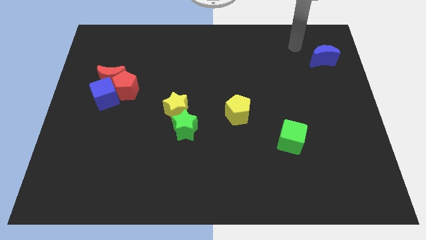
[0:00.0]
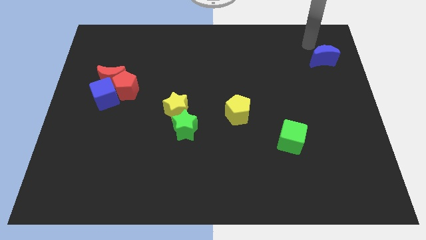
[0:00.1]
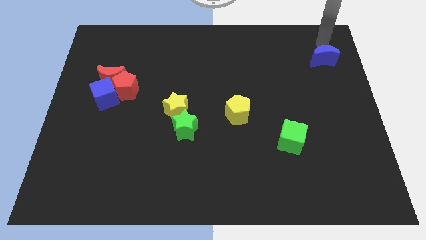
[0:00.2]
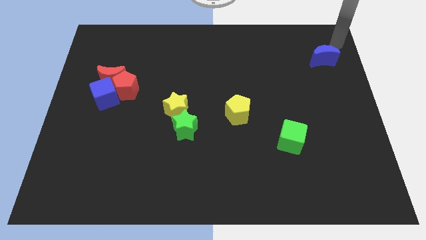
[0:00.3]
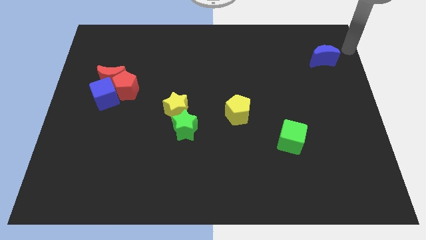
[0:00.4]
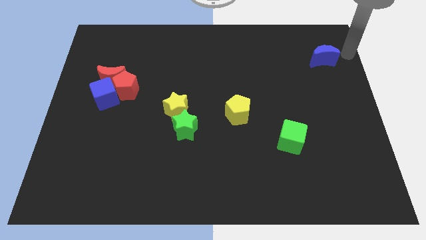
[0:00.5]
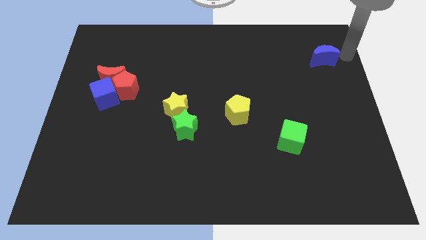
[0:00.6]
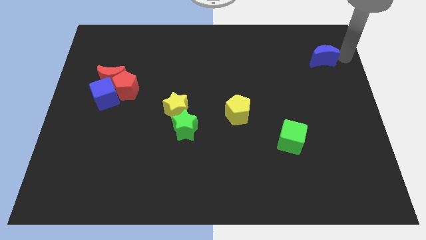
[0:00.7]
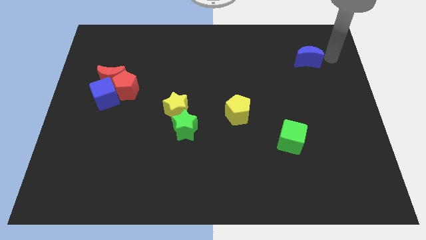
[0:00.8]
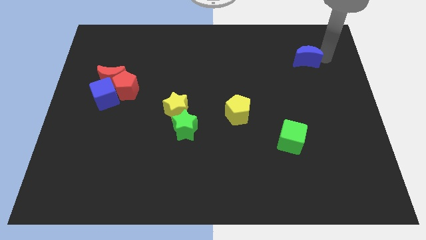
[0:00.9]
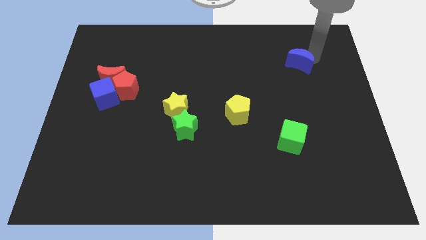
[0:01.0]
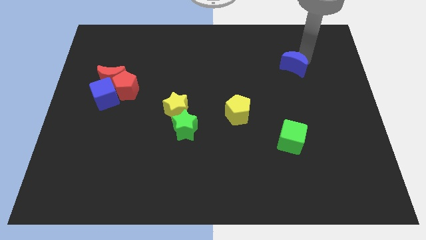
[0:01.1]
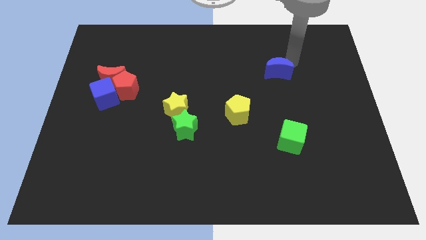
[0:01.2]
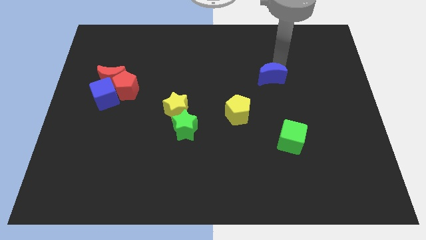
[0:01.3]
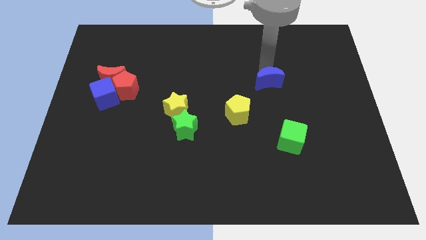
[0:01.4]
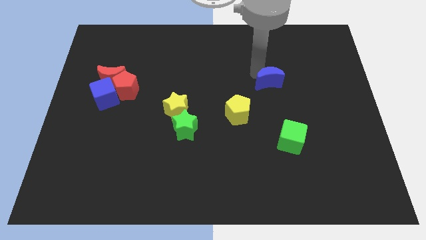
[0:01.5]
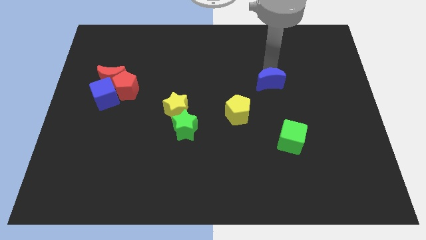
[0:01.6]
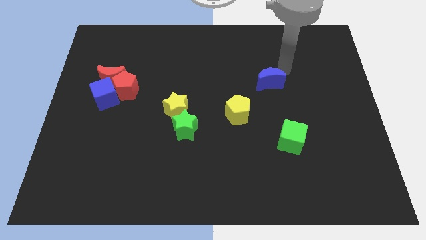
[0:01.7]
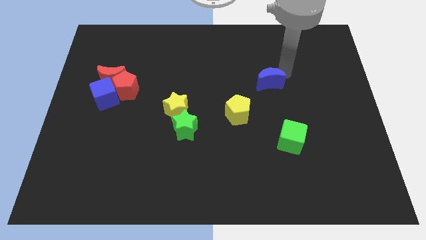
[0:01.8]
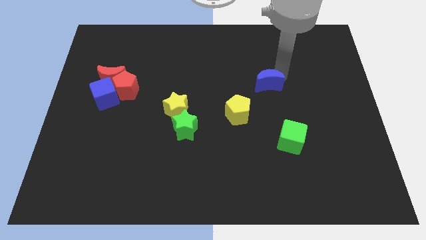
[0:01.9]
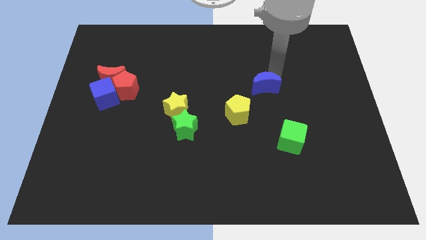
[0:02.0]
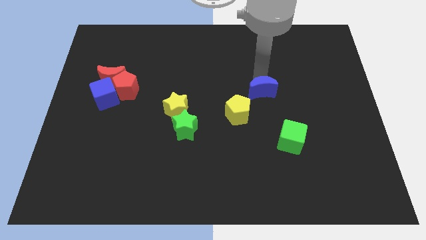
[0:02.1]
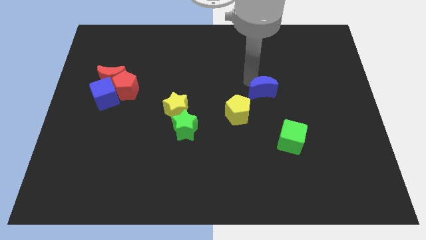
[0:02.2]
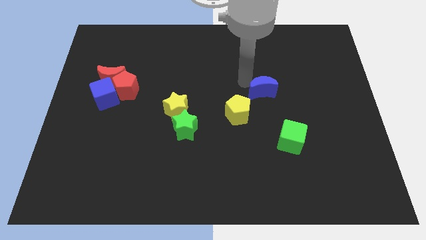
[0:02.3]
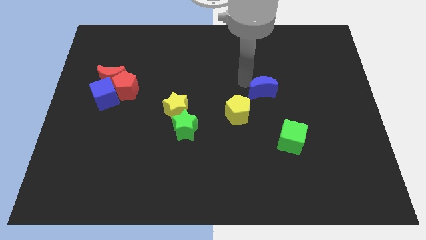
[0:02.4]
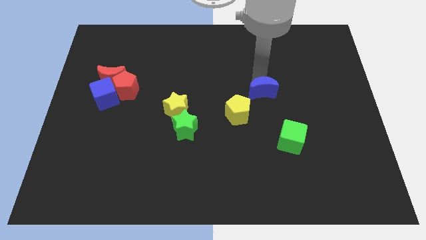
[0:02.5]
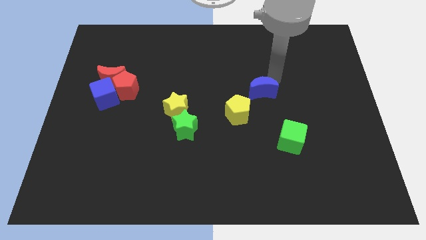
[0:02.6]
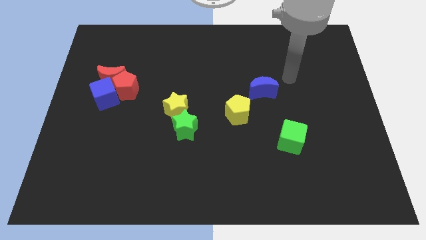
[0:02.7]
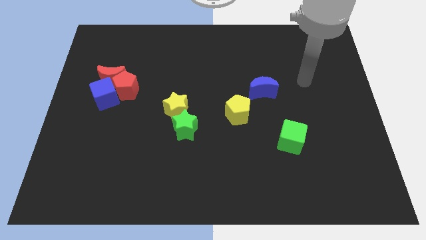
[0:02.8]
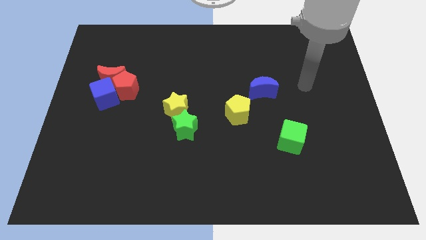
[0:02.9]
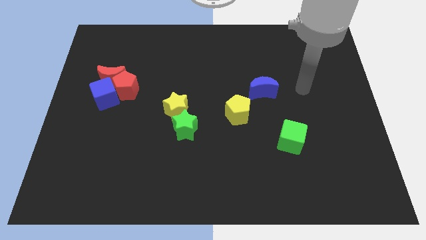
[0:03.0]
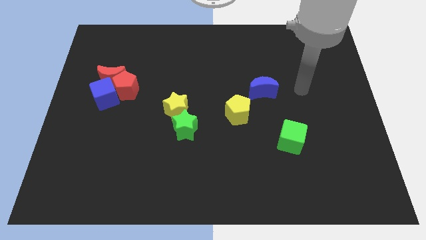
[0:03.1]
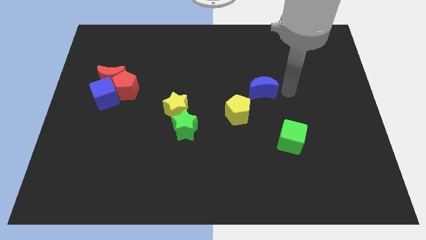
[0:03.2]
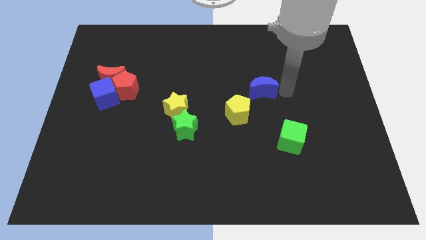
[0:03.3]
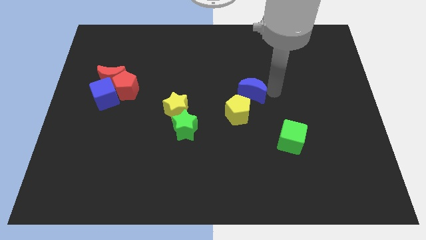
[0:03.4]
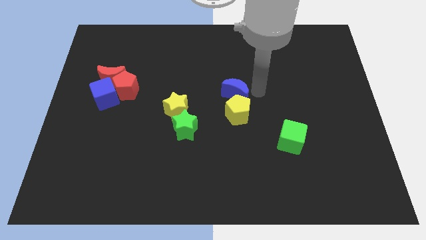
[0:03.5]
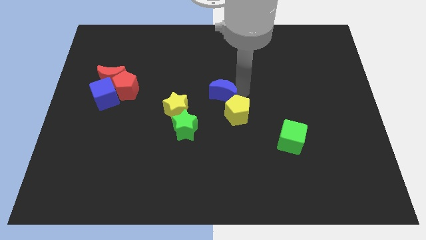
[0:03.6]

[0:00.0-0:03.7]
push blue crescent above yellow pentagon

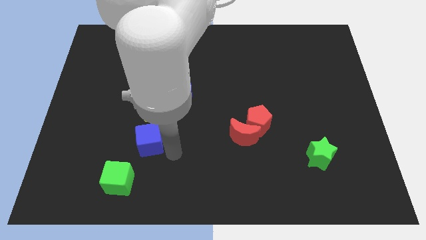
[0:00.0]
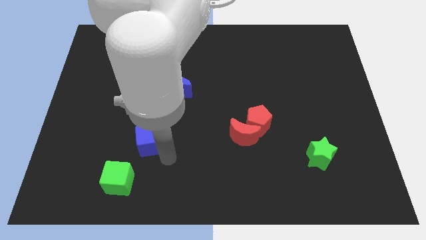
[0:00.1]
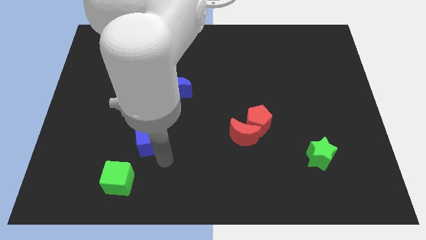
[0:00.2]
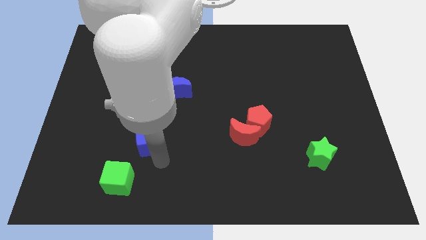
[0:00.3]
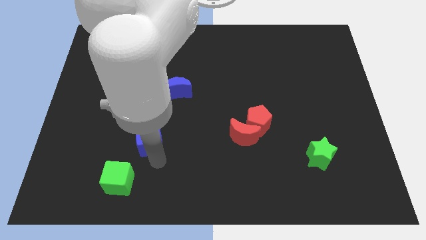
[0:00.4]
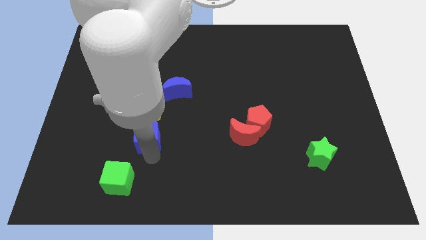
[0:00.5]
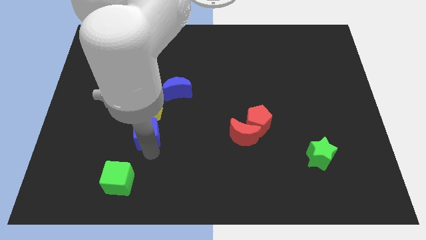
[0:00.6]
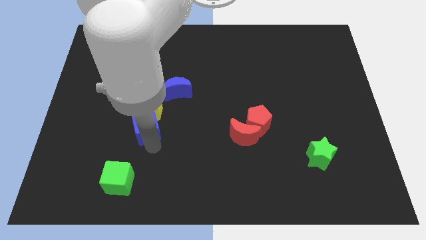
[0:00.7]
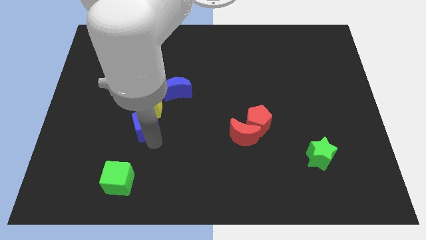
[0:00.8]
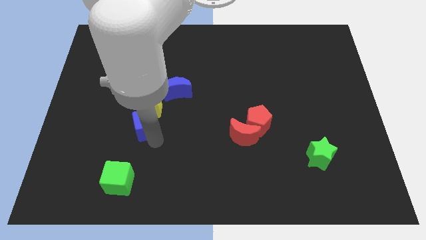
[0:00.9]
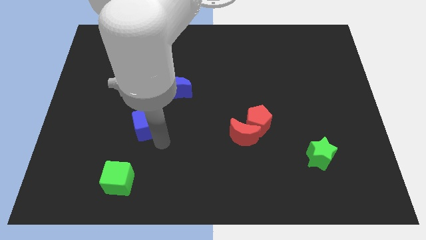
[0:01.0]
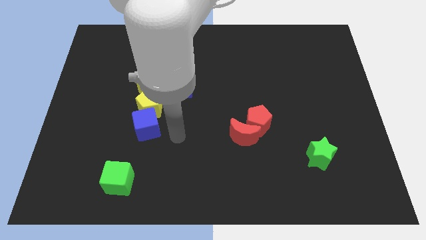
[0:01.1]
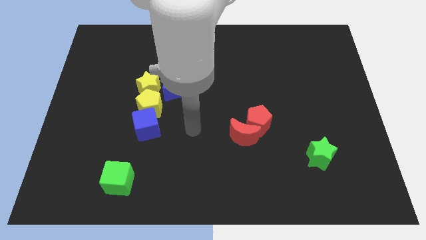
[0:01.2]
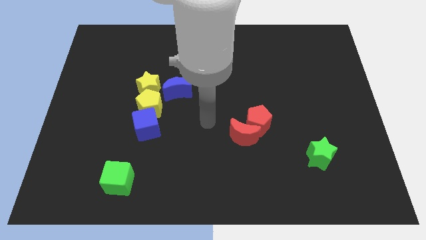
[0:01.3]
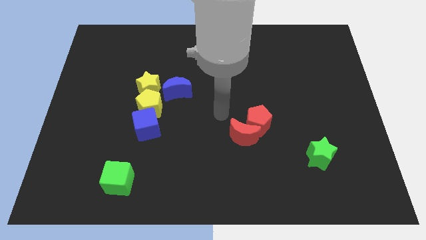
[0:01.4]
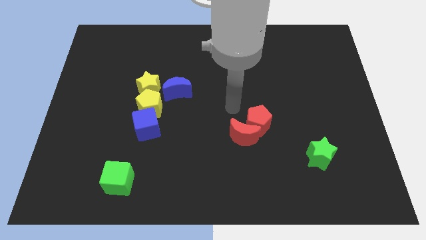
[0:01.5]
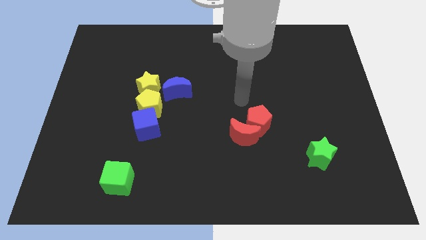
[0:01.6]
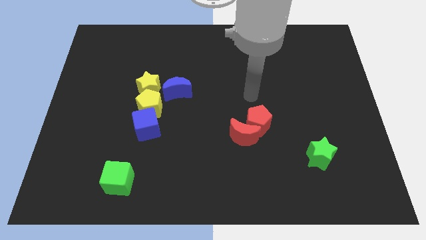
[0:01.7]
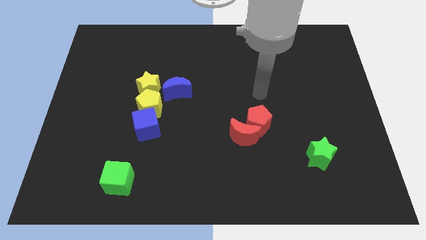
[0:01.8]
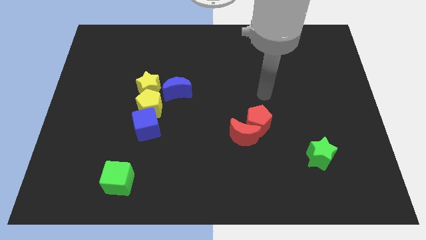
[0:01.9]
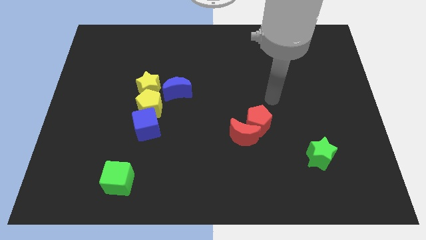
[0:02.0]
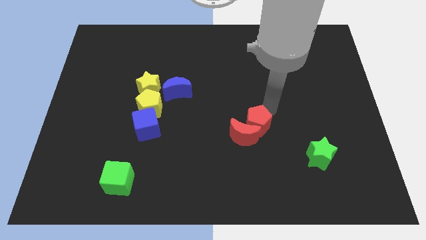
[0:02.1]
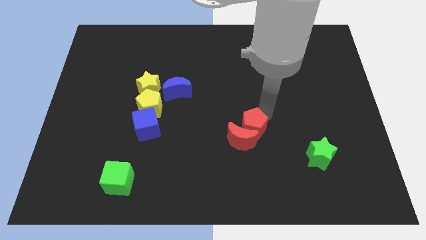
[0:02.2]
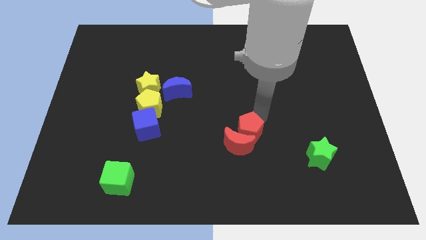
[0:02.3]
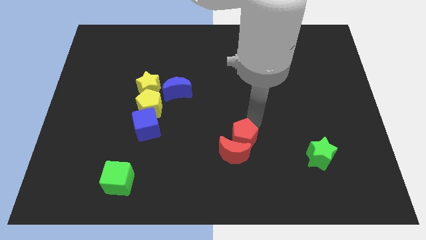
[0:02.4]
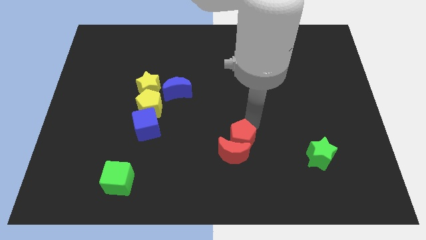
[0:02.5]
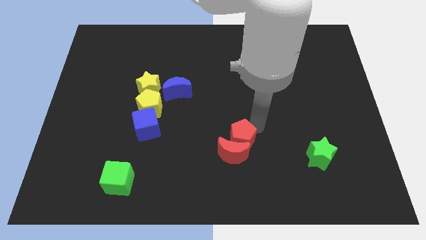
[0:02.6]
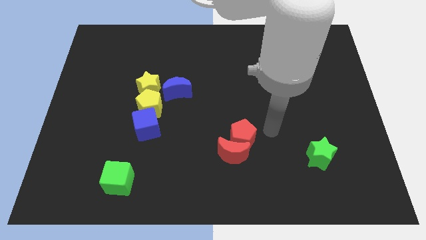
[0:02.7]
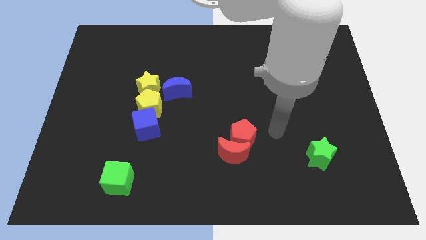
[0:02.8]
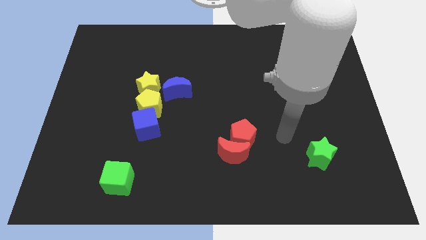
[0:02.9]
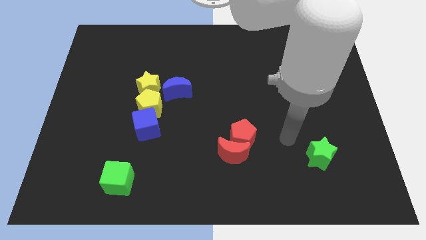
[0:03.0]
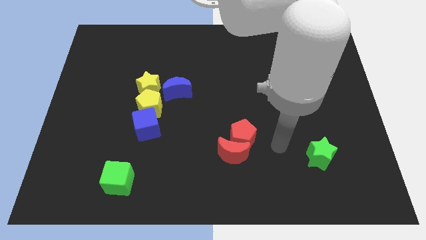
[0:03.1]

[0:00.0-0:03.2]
slightly move the red pentagon and red crescent towards bottom

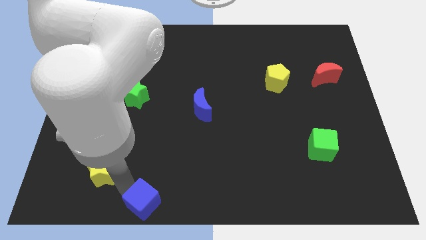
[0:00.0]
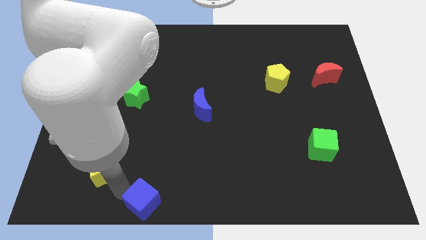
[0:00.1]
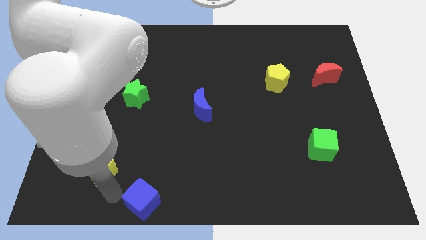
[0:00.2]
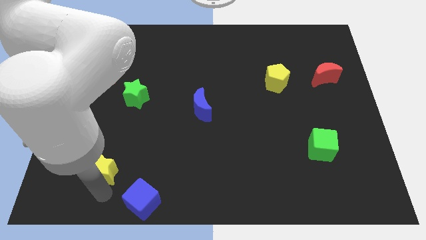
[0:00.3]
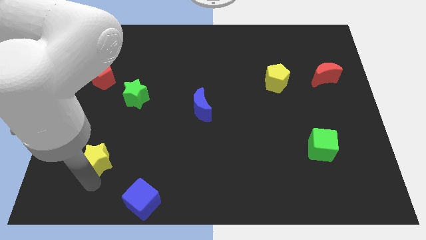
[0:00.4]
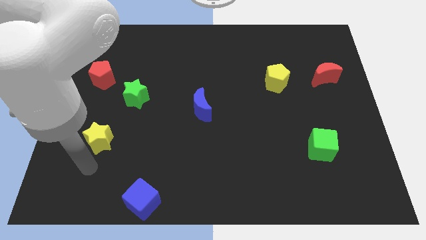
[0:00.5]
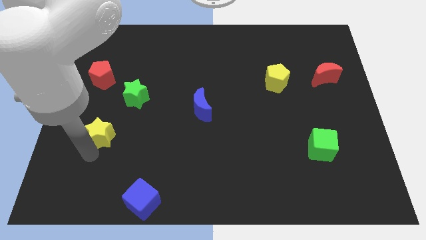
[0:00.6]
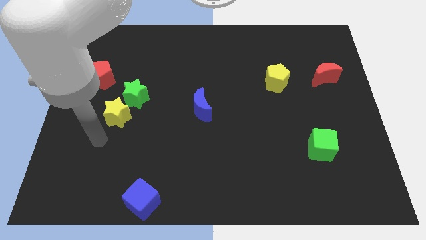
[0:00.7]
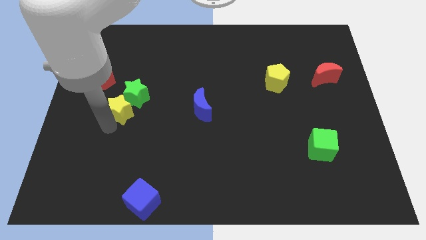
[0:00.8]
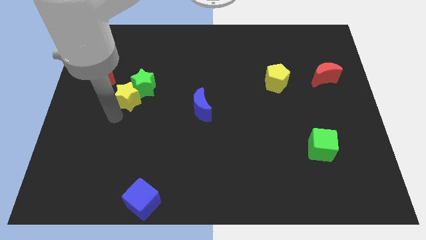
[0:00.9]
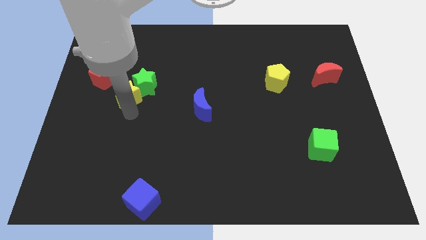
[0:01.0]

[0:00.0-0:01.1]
add yellow star into green star

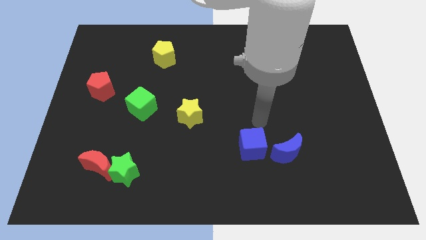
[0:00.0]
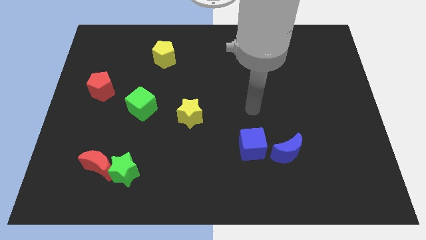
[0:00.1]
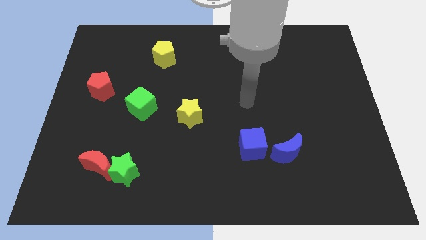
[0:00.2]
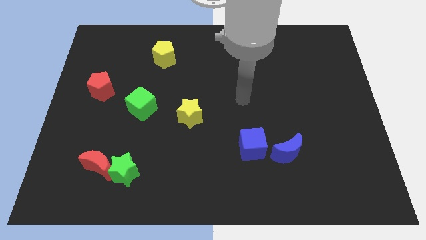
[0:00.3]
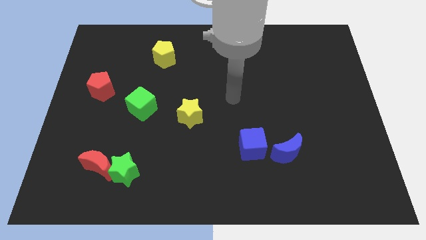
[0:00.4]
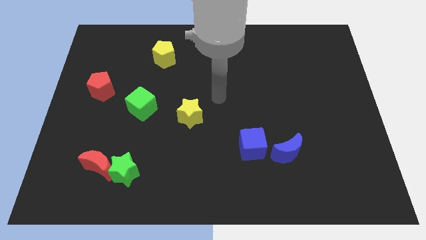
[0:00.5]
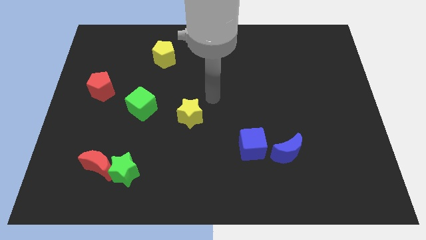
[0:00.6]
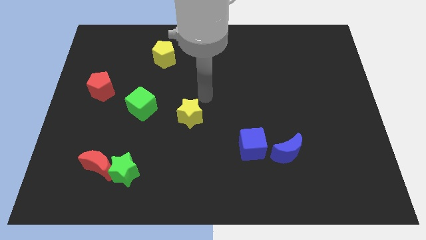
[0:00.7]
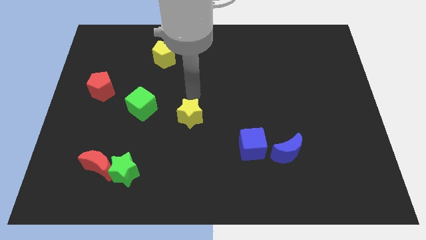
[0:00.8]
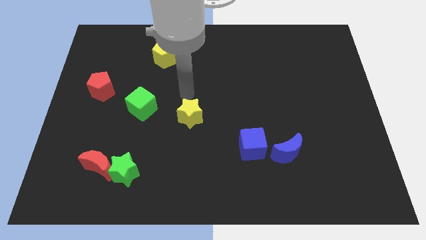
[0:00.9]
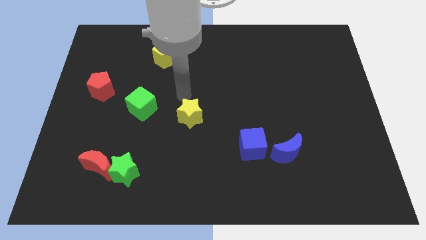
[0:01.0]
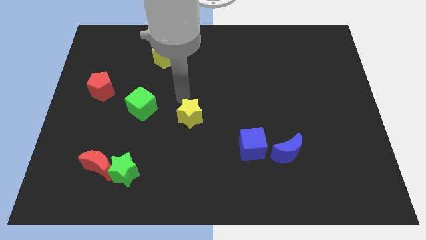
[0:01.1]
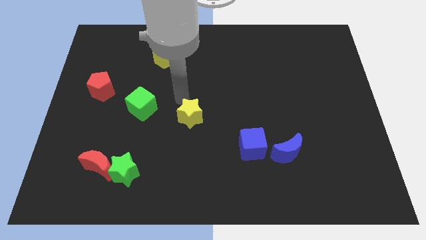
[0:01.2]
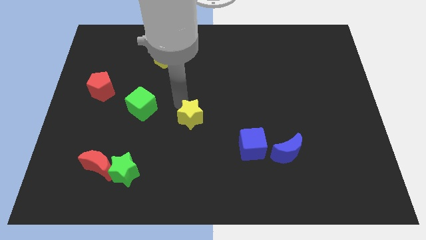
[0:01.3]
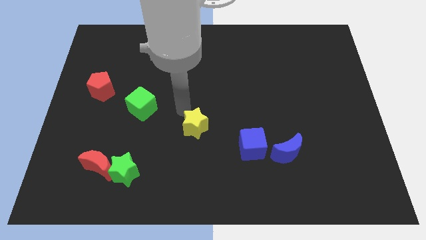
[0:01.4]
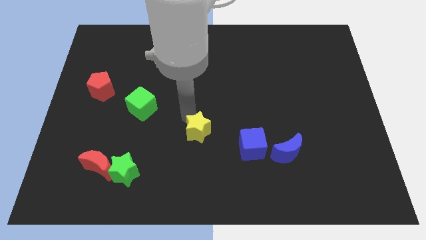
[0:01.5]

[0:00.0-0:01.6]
push the yellow star downwards
